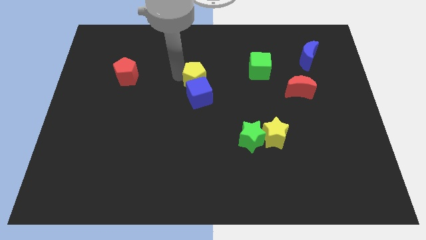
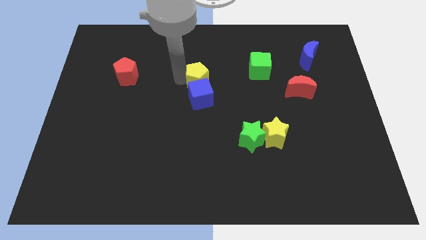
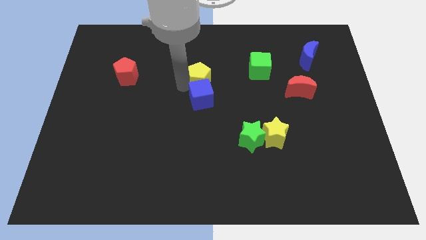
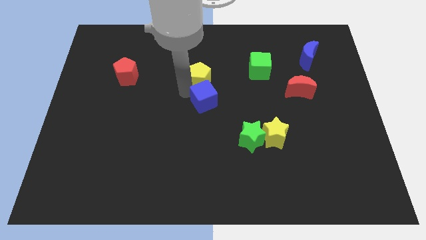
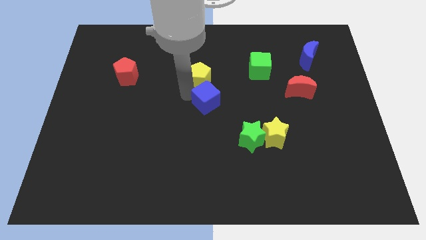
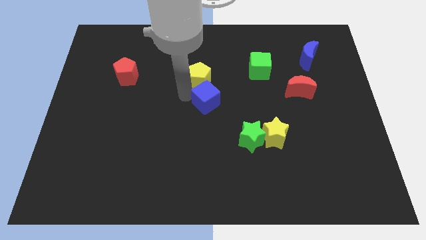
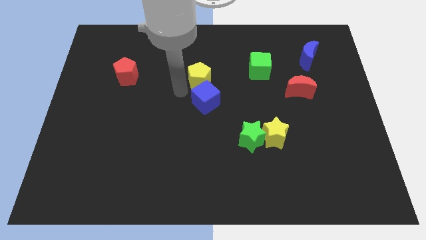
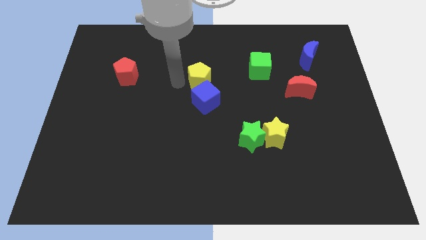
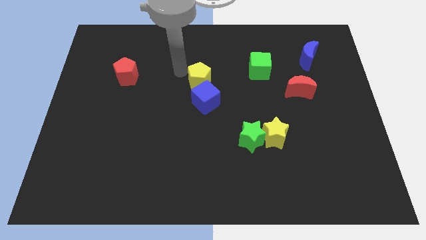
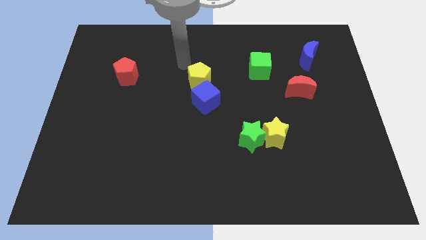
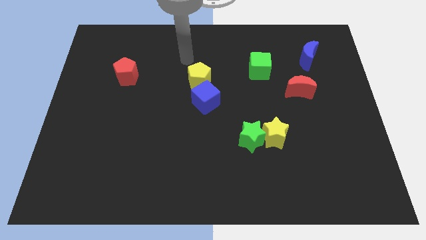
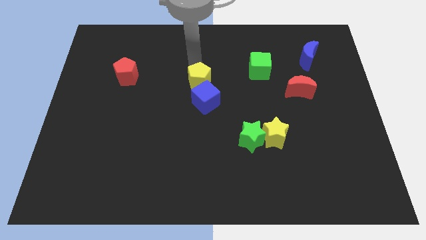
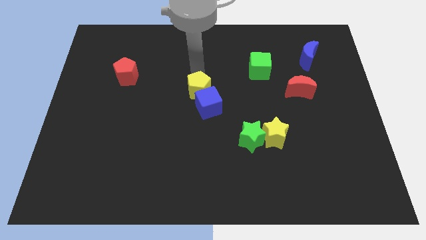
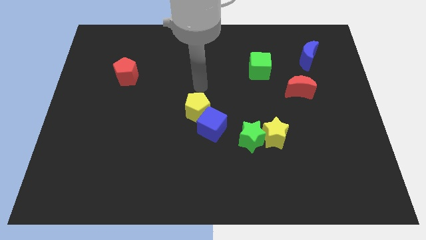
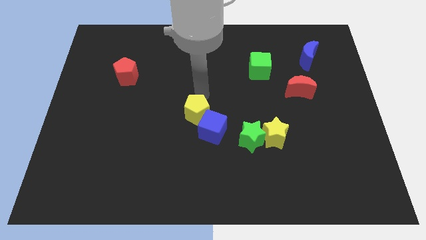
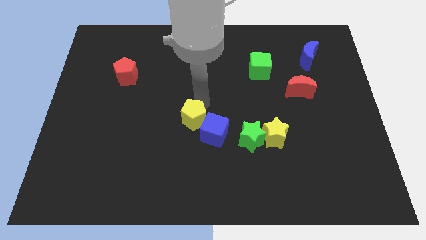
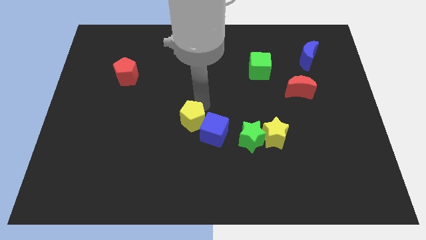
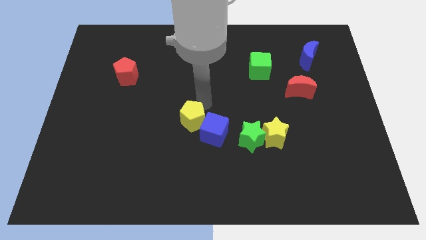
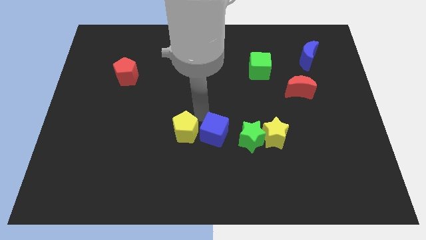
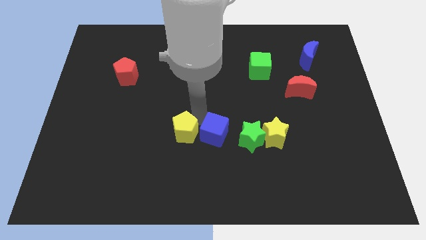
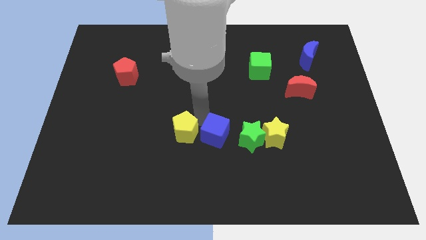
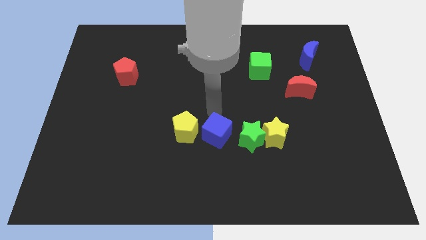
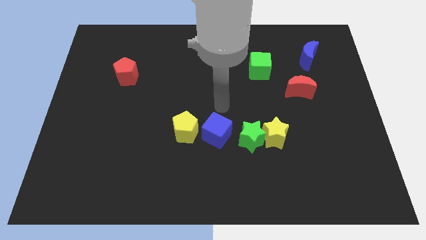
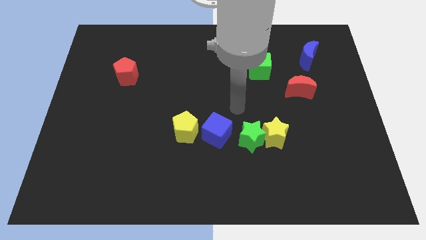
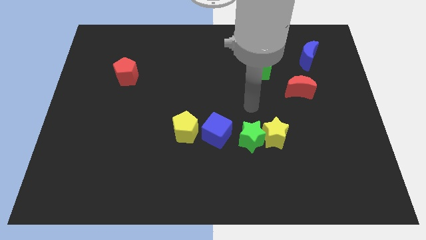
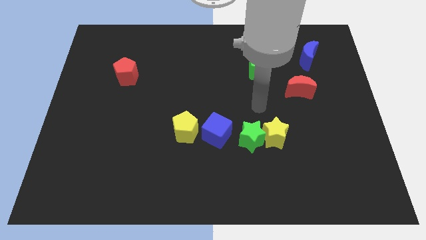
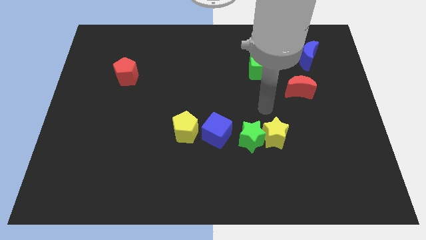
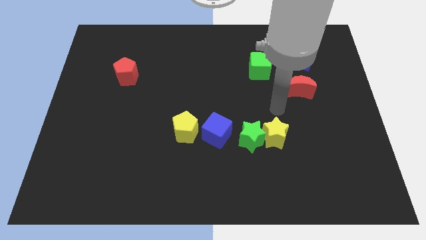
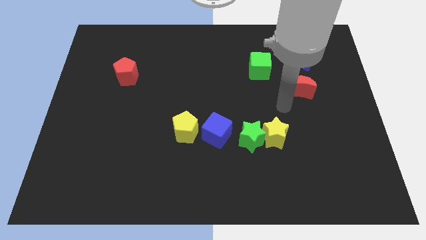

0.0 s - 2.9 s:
push the yellow pentagon in to blue cube

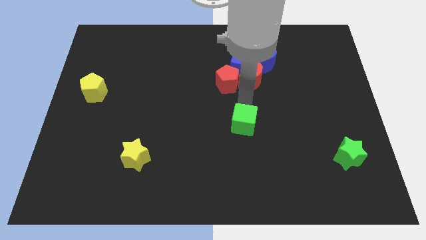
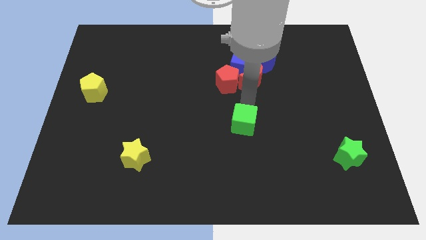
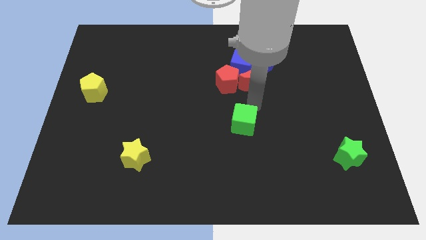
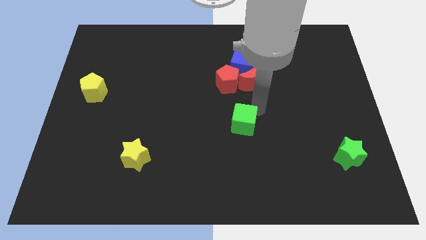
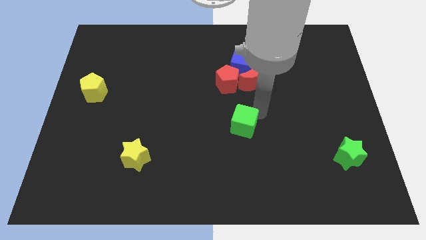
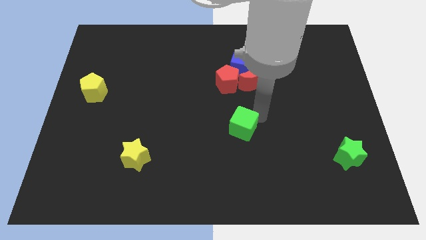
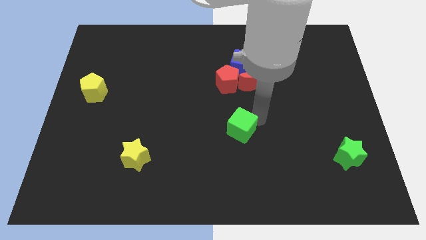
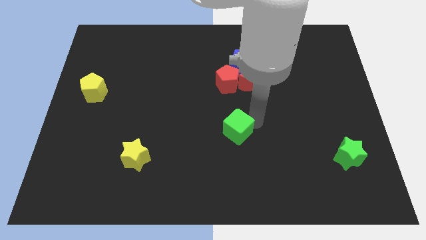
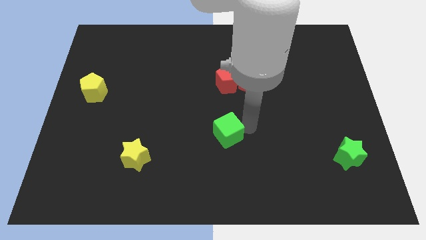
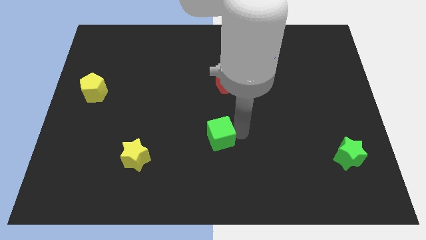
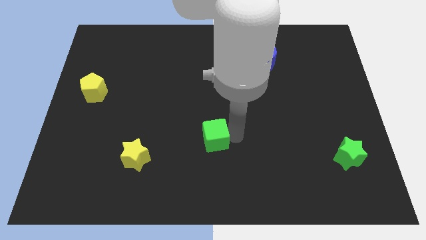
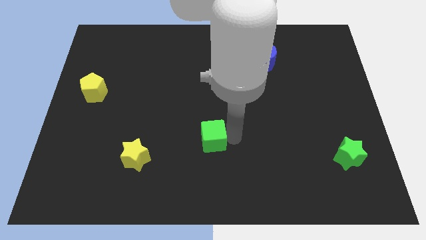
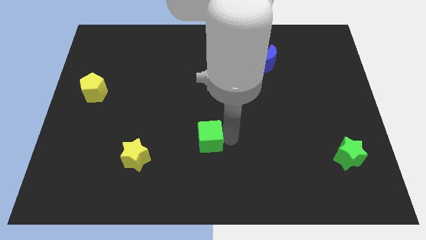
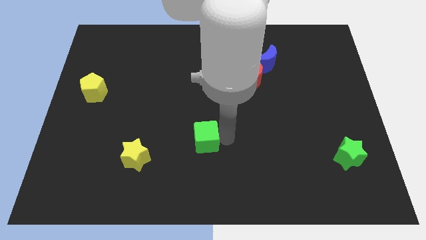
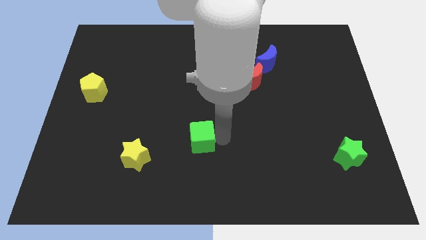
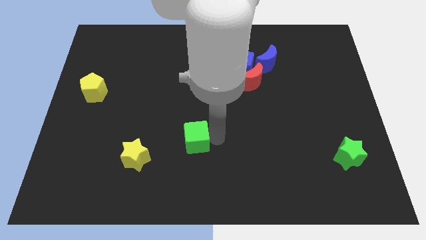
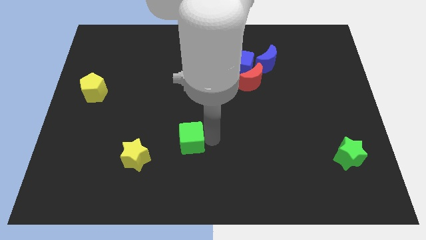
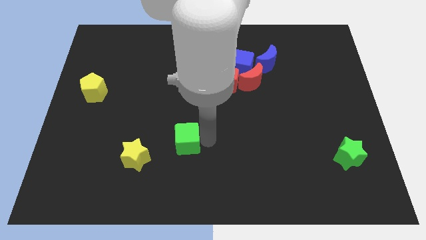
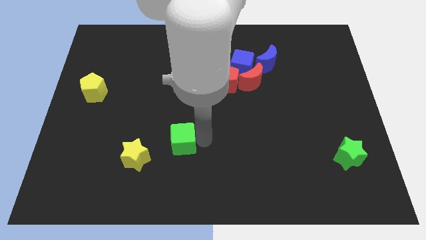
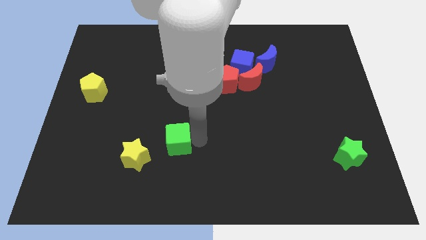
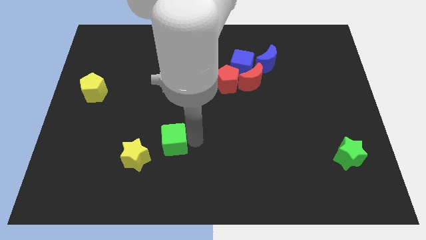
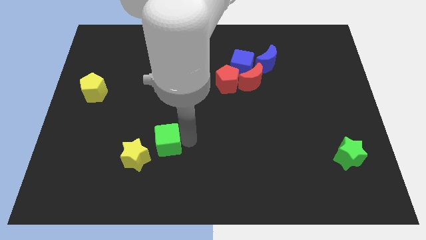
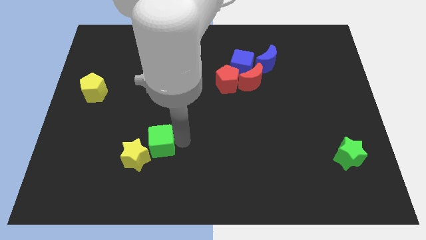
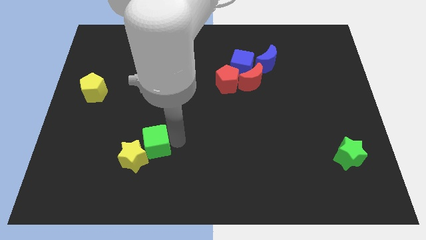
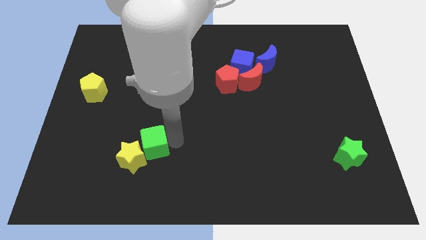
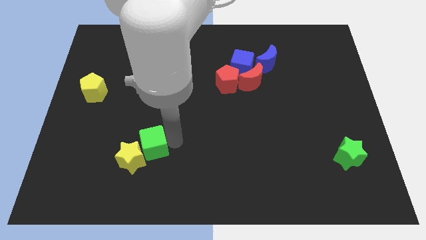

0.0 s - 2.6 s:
move the green cube to the right of the yellow star

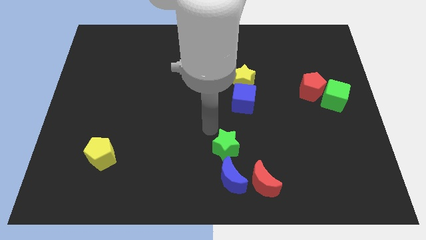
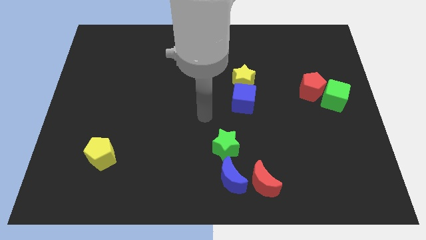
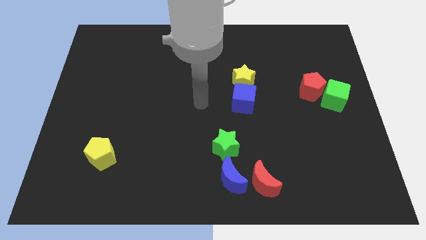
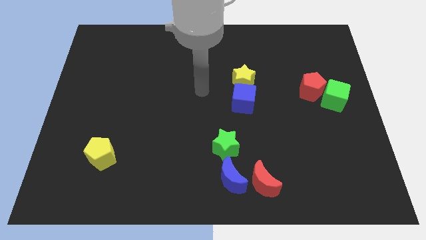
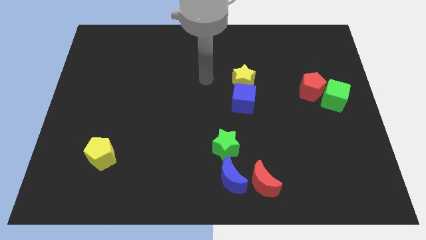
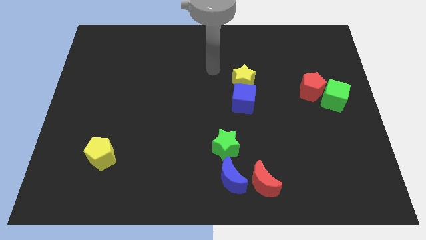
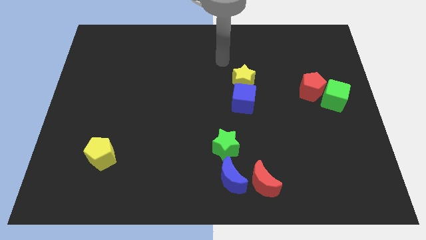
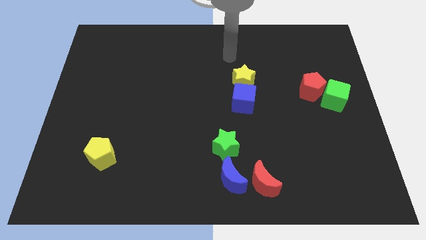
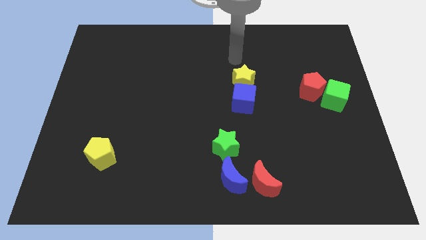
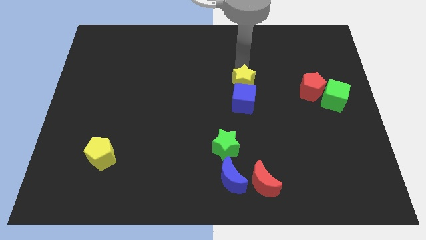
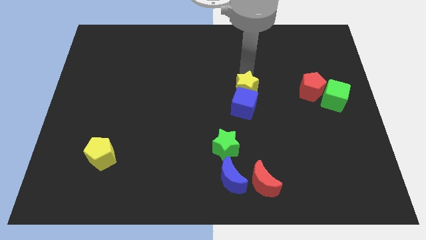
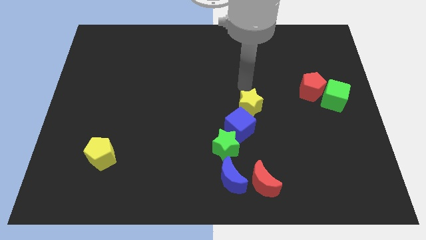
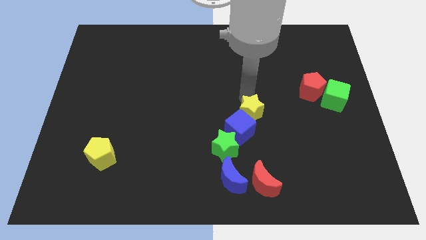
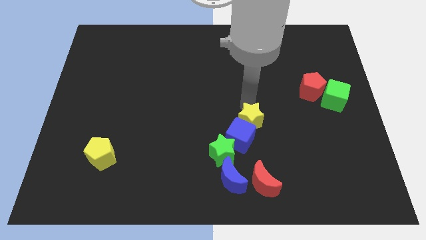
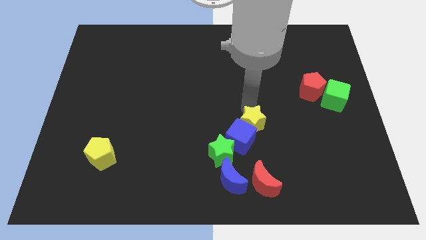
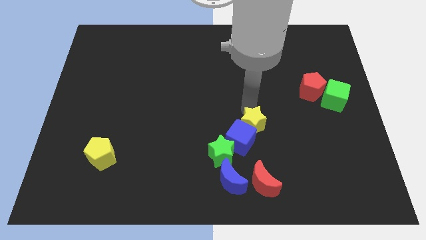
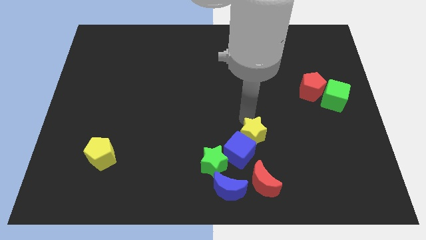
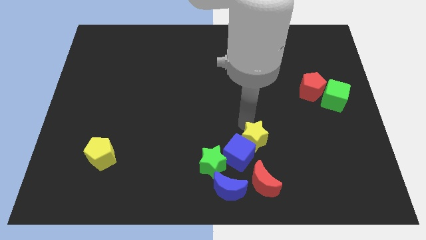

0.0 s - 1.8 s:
push the yellow star with blue cube into green star diagonally

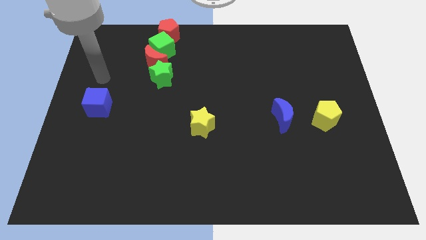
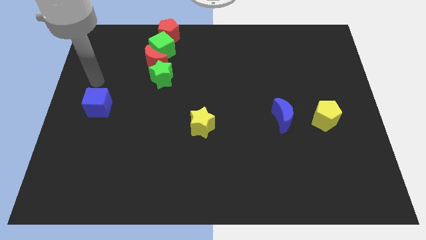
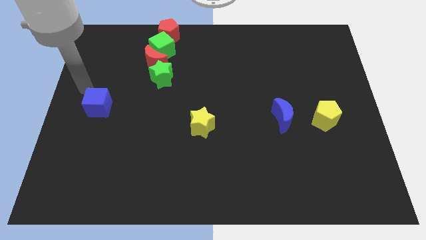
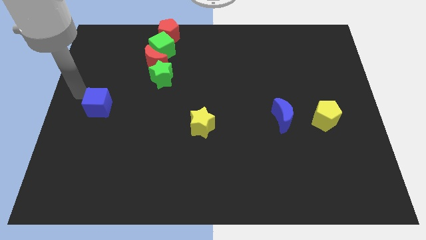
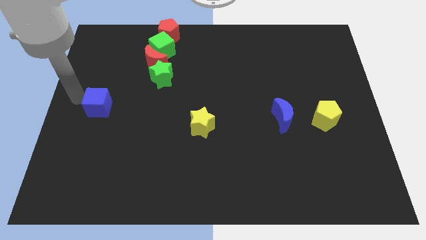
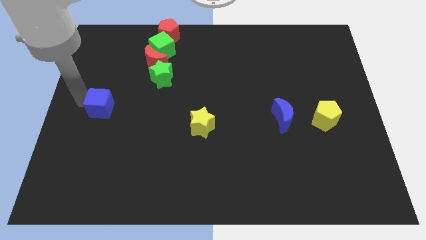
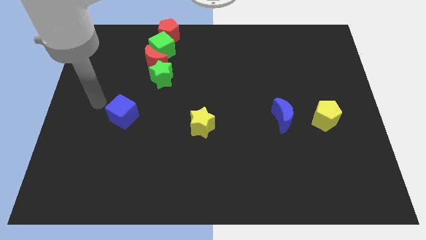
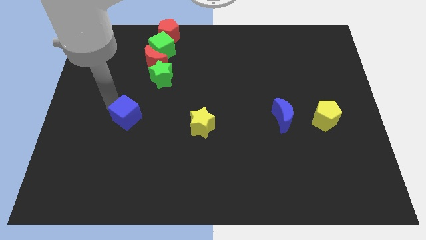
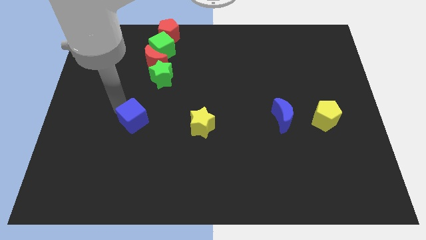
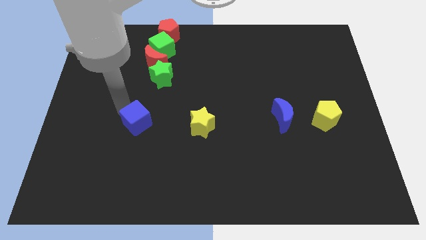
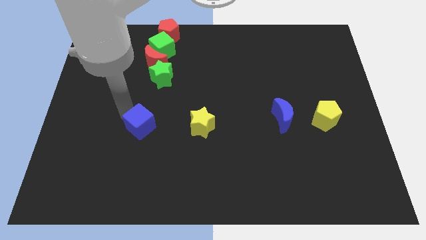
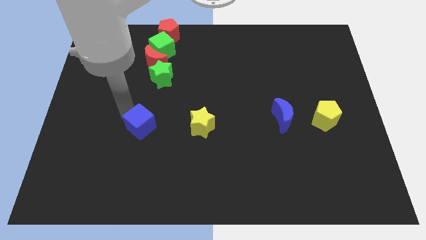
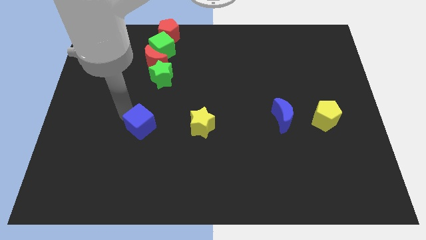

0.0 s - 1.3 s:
move the blue cube to the left of the yellow star

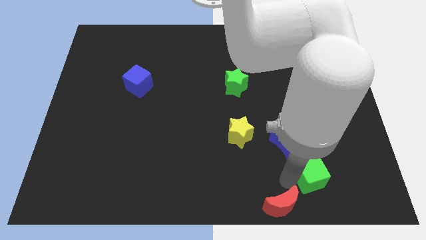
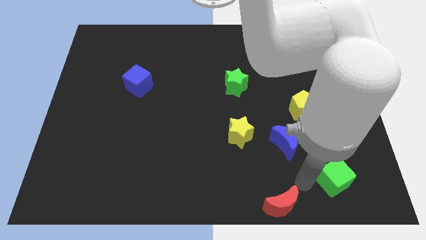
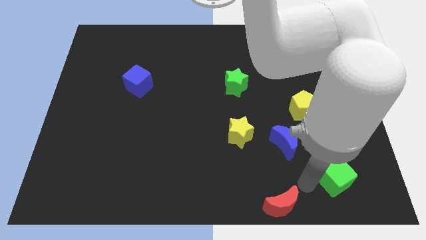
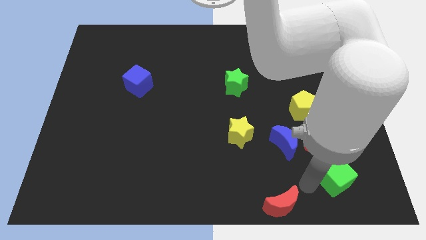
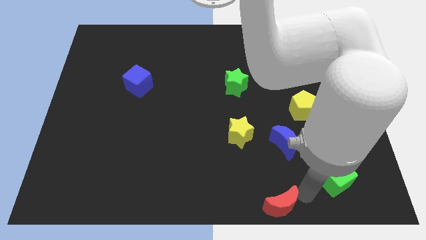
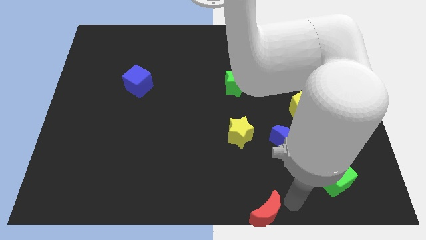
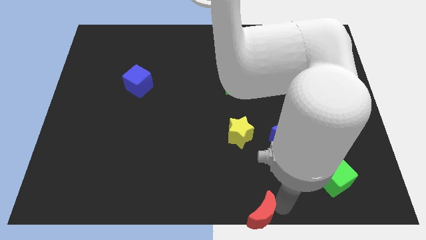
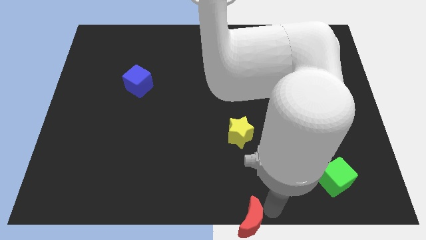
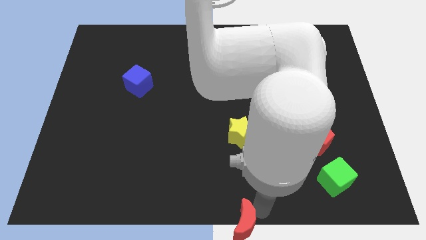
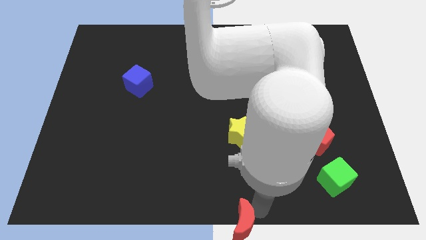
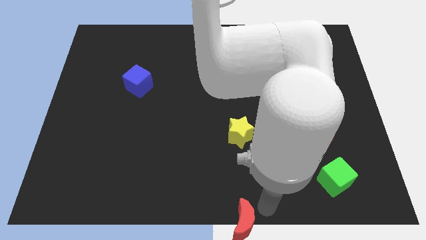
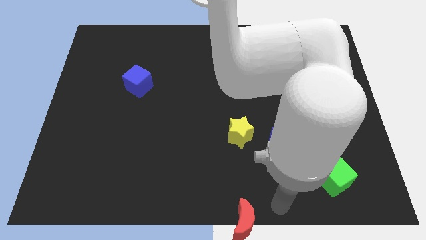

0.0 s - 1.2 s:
move the red moon to the bottom center
